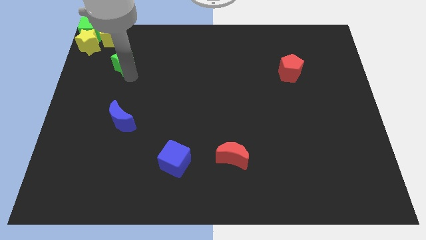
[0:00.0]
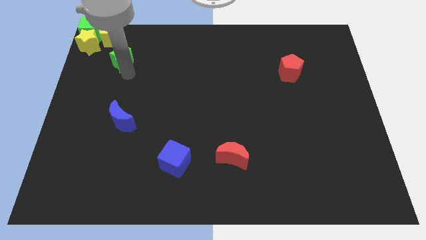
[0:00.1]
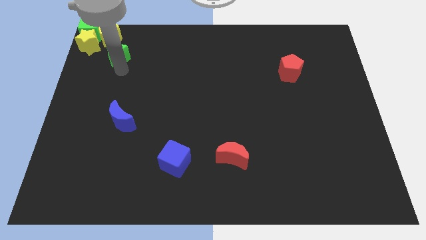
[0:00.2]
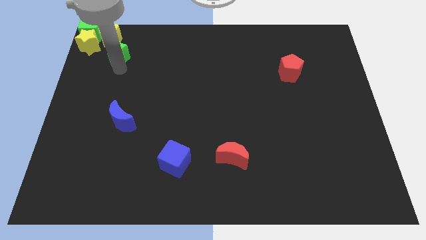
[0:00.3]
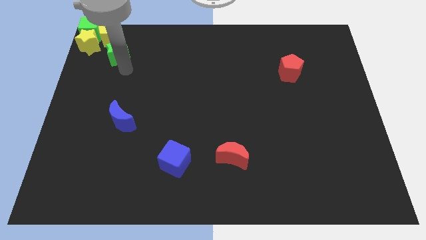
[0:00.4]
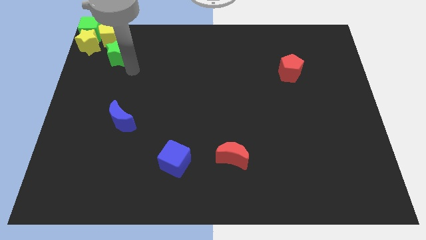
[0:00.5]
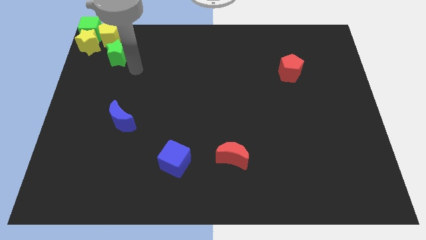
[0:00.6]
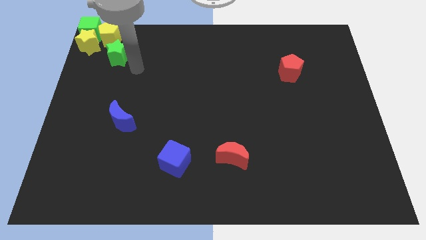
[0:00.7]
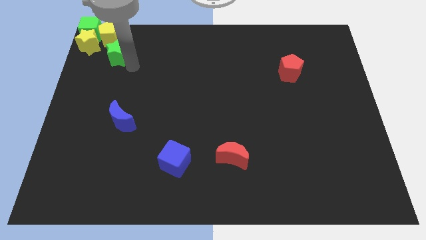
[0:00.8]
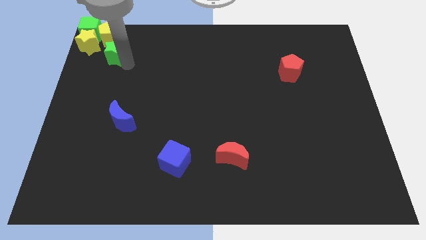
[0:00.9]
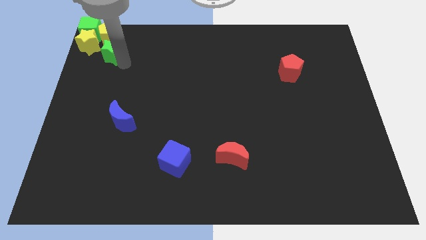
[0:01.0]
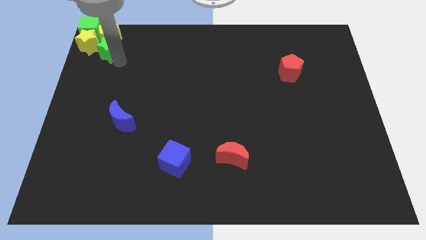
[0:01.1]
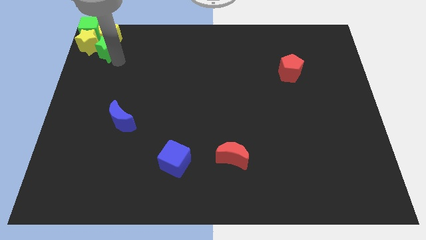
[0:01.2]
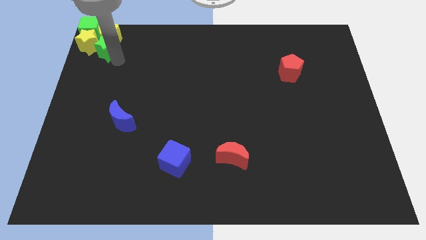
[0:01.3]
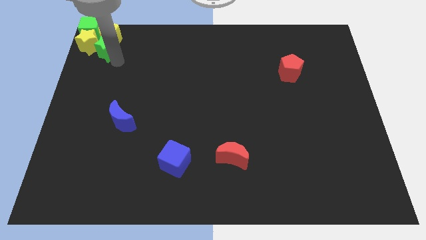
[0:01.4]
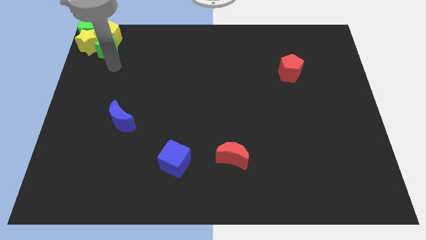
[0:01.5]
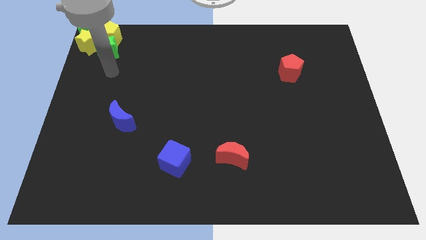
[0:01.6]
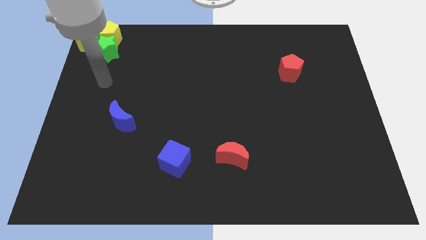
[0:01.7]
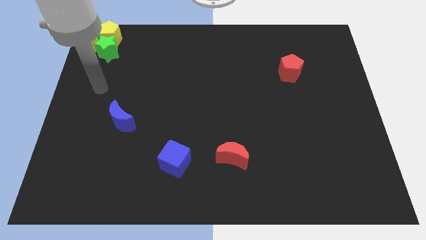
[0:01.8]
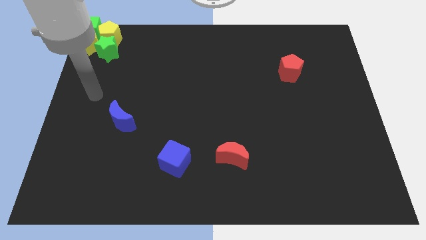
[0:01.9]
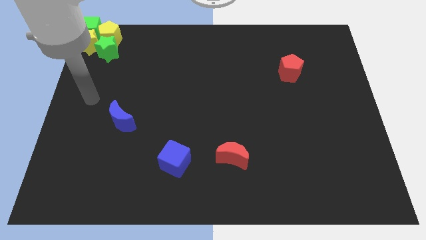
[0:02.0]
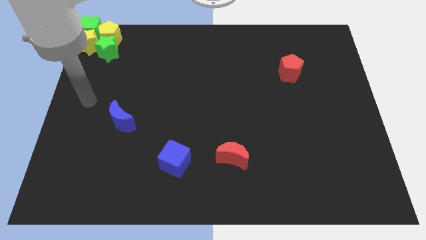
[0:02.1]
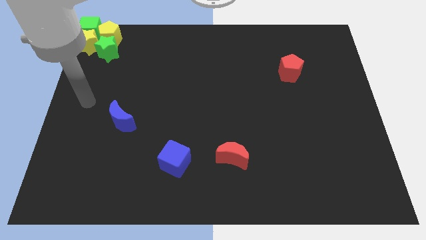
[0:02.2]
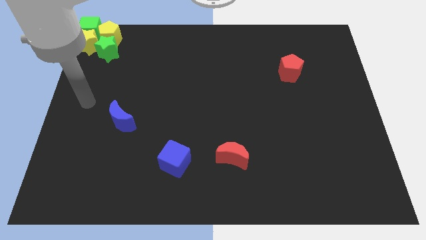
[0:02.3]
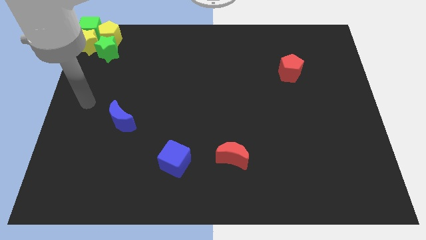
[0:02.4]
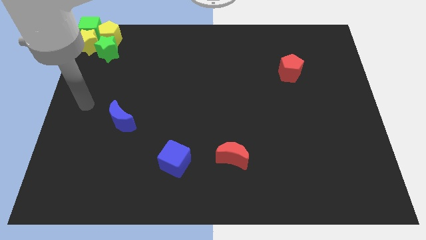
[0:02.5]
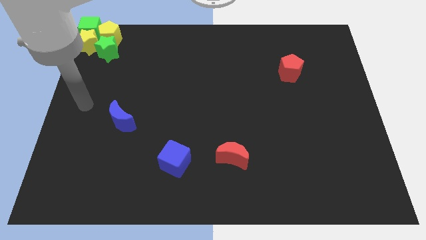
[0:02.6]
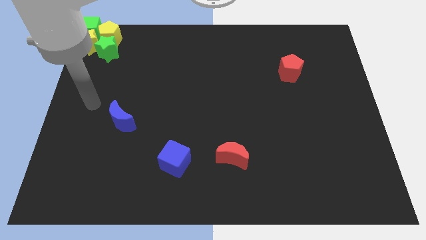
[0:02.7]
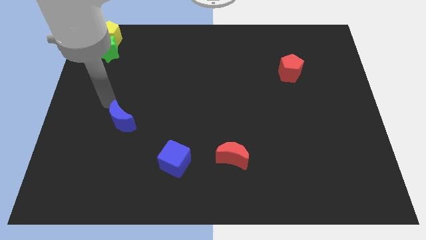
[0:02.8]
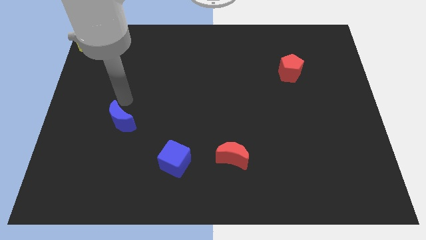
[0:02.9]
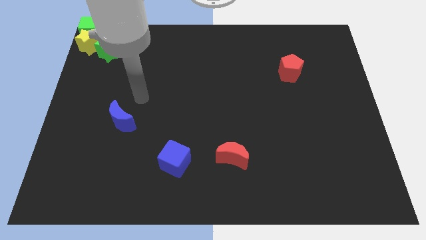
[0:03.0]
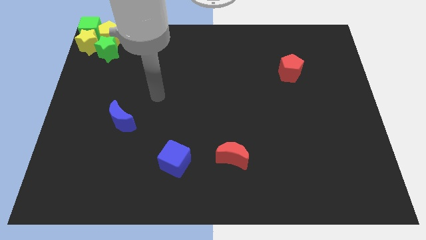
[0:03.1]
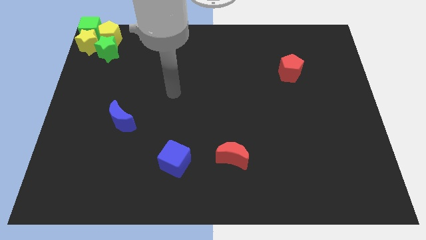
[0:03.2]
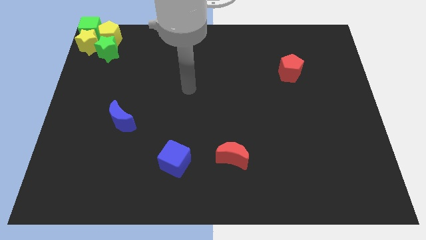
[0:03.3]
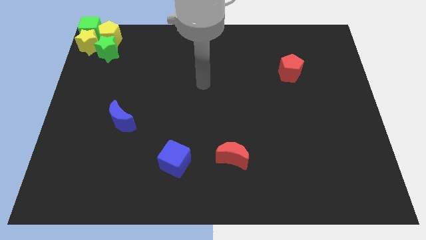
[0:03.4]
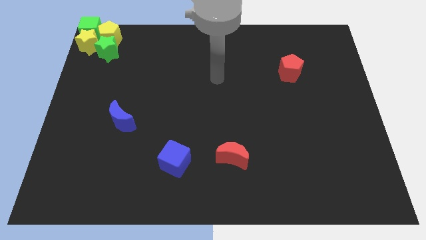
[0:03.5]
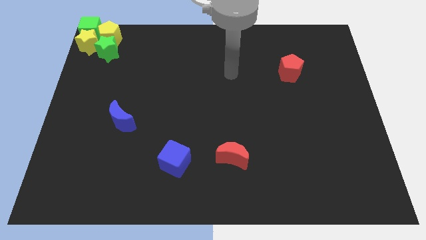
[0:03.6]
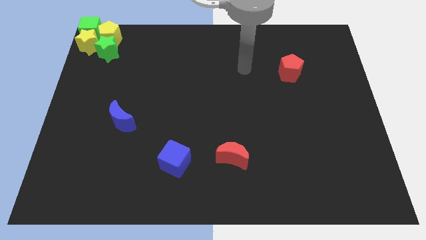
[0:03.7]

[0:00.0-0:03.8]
push the green star into the yellow blocks

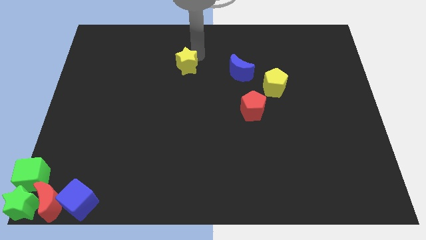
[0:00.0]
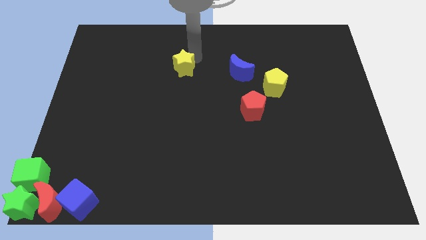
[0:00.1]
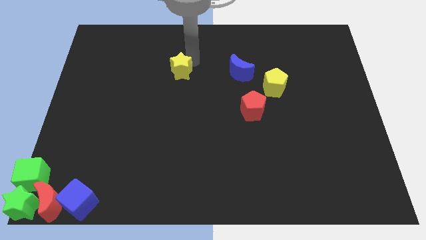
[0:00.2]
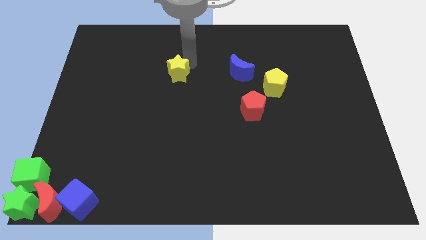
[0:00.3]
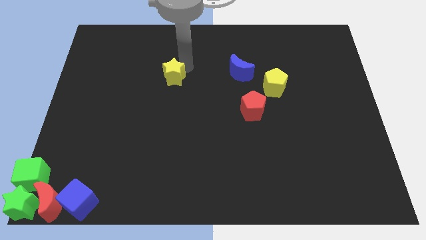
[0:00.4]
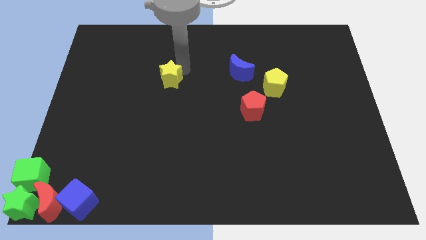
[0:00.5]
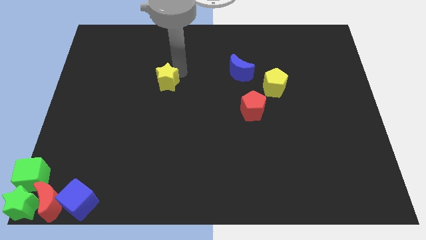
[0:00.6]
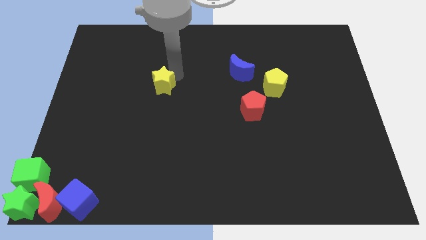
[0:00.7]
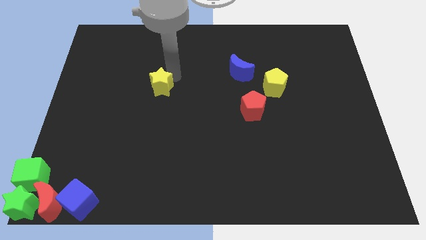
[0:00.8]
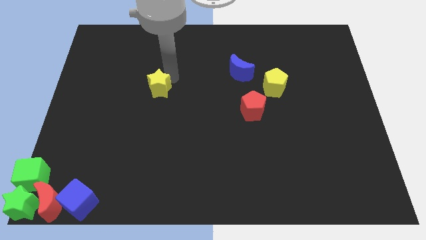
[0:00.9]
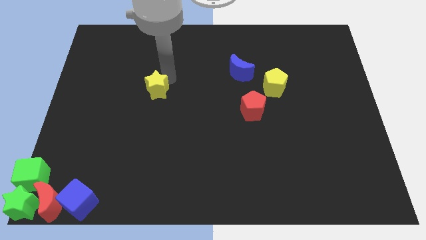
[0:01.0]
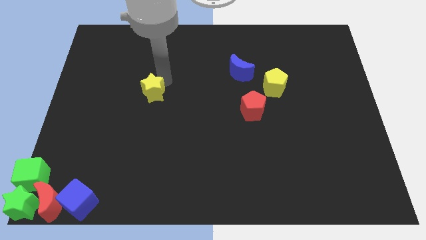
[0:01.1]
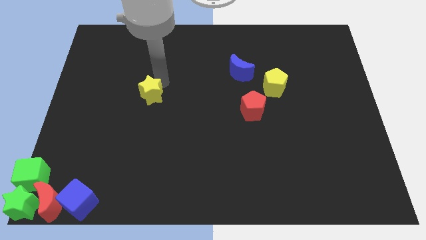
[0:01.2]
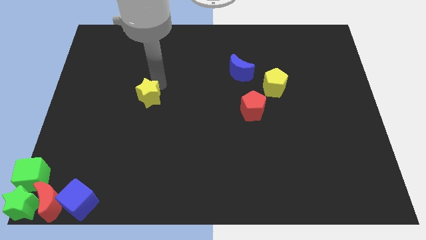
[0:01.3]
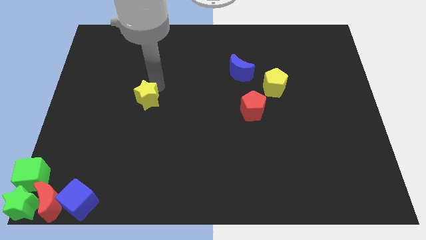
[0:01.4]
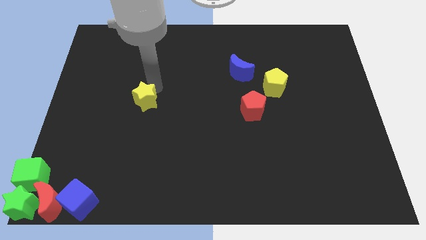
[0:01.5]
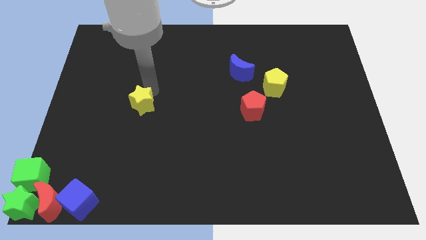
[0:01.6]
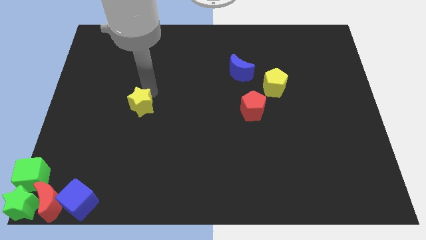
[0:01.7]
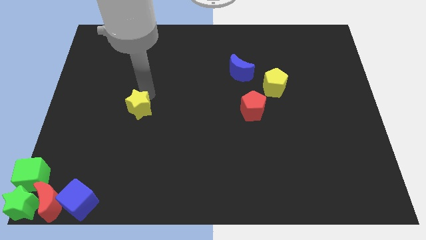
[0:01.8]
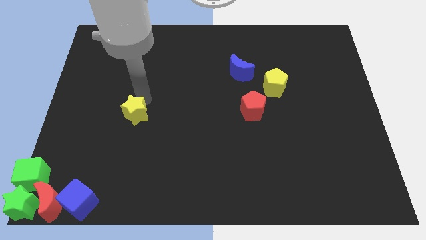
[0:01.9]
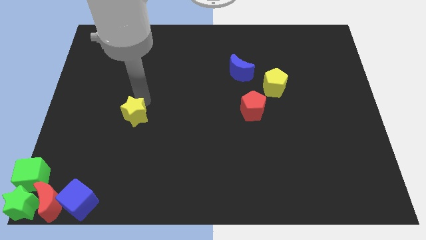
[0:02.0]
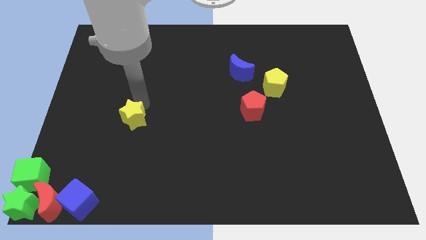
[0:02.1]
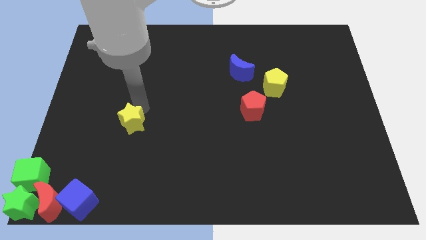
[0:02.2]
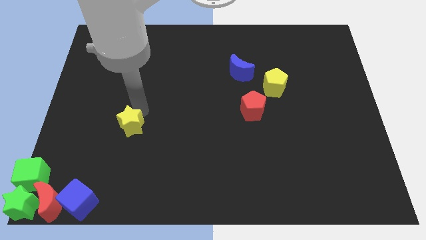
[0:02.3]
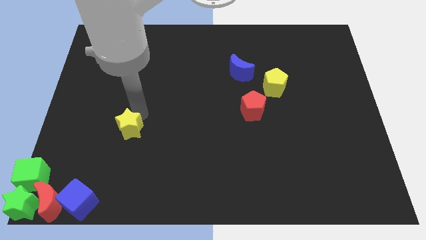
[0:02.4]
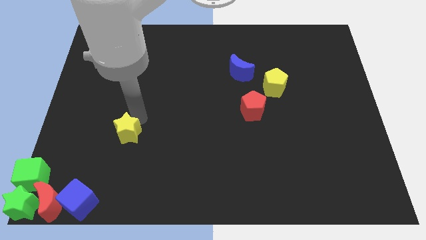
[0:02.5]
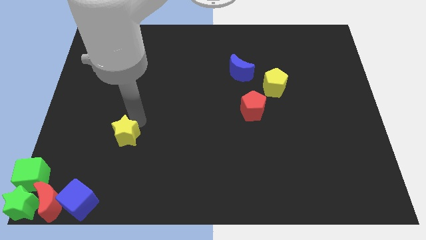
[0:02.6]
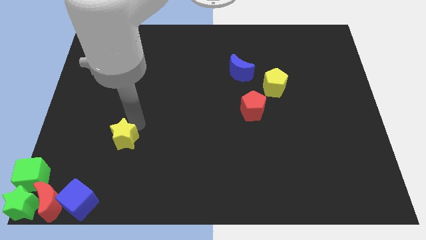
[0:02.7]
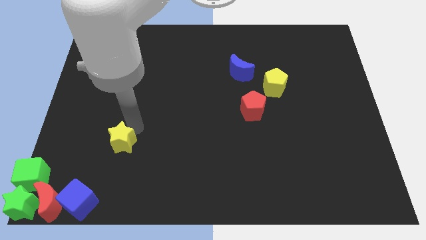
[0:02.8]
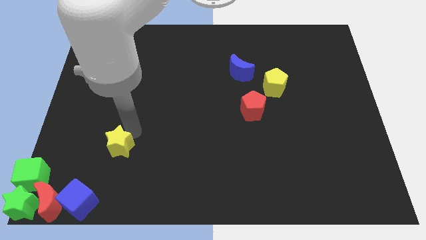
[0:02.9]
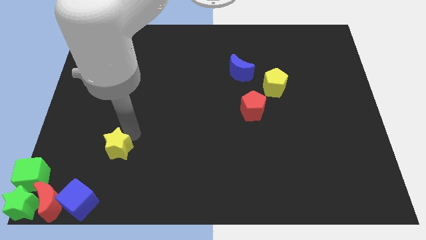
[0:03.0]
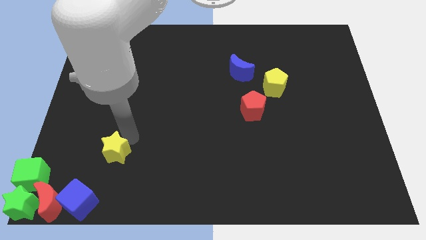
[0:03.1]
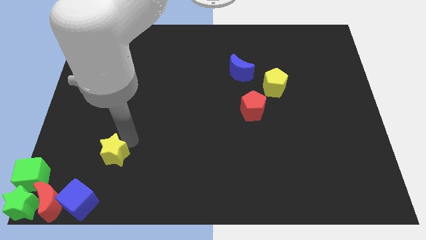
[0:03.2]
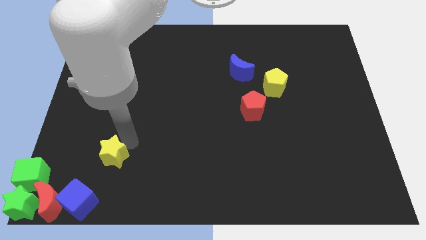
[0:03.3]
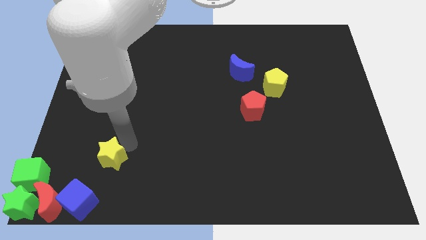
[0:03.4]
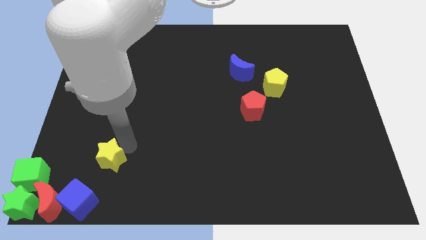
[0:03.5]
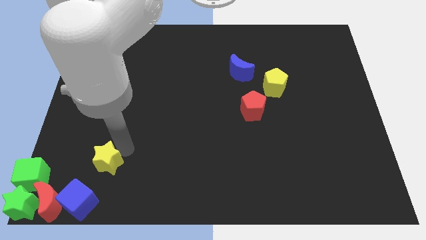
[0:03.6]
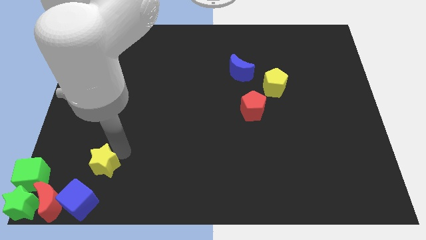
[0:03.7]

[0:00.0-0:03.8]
push the yellow star to the top right of the blue cube

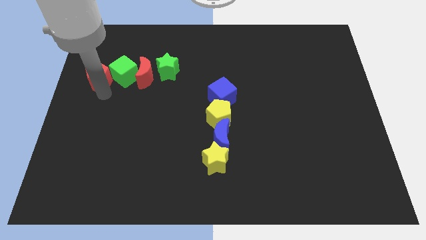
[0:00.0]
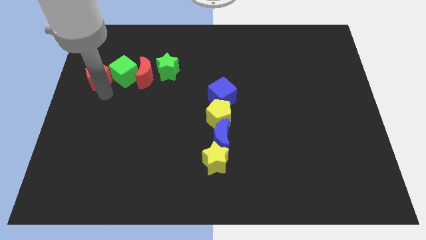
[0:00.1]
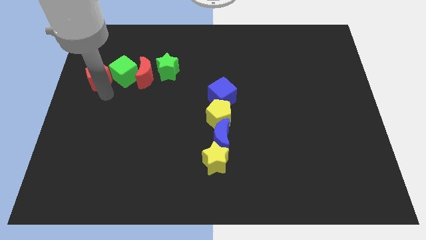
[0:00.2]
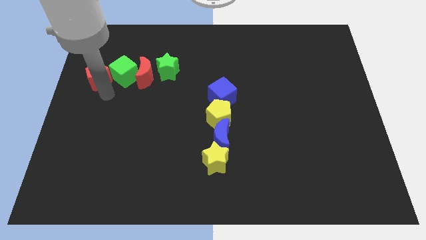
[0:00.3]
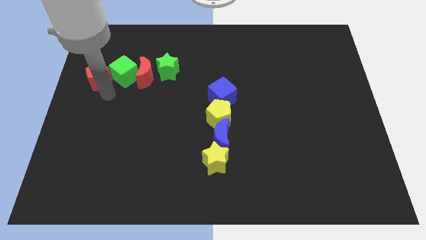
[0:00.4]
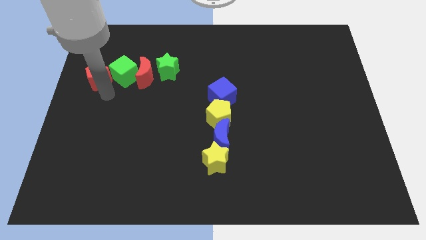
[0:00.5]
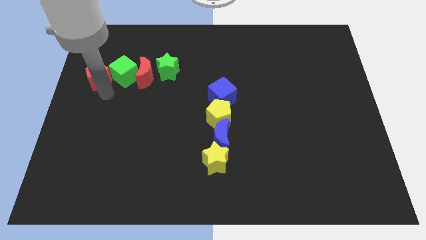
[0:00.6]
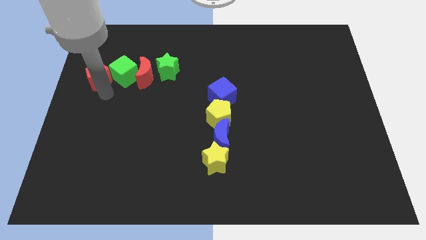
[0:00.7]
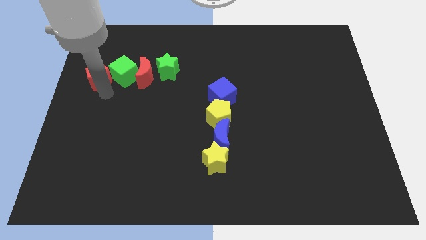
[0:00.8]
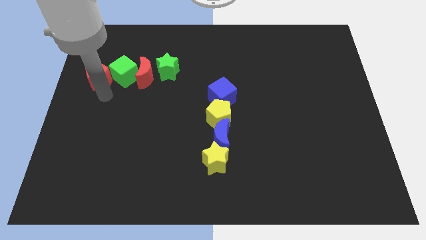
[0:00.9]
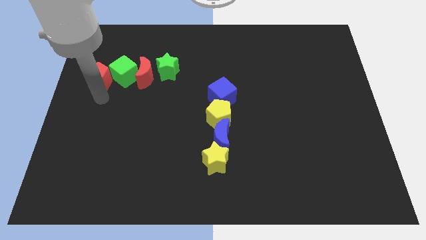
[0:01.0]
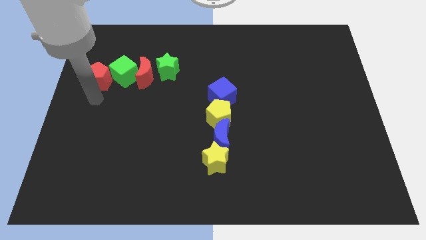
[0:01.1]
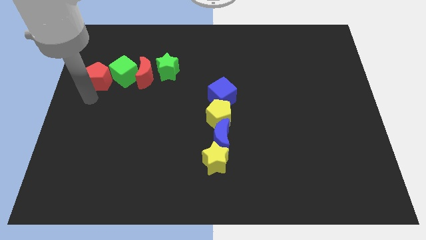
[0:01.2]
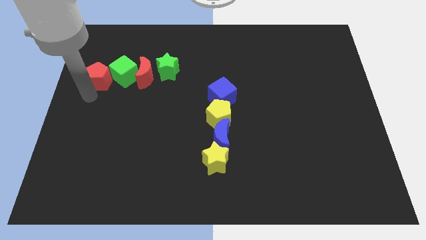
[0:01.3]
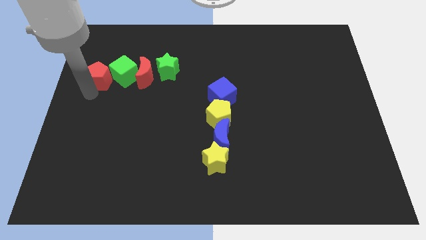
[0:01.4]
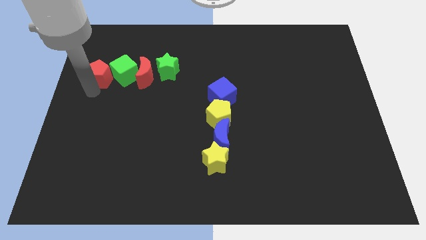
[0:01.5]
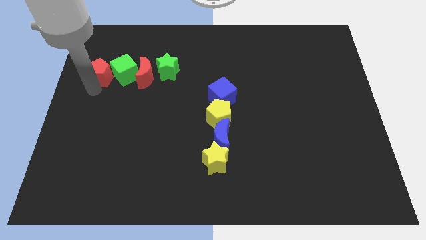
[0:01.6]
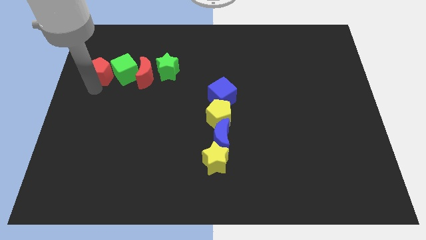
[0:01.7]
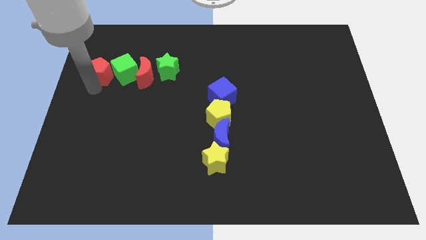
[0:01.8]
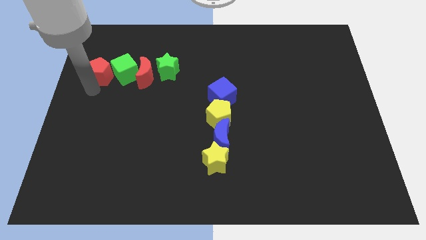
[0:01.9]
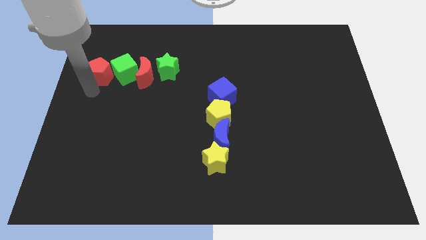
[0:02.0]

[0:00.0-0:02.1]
push the red pentagon to the left of the green cube on the board
